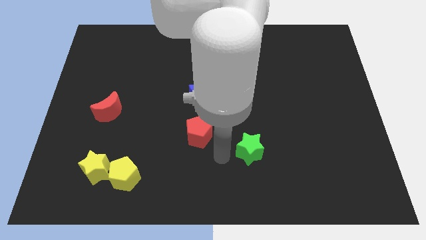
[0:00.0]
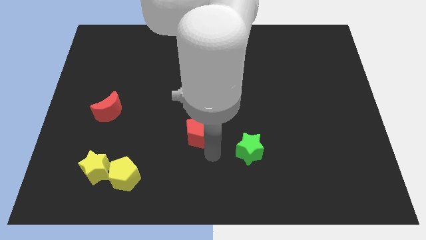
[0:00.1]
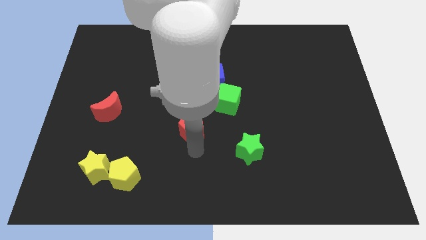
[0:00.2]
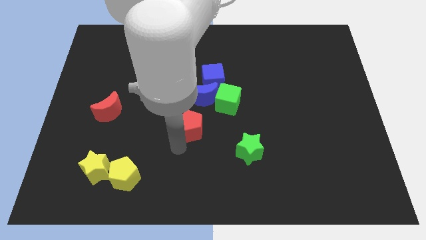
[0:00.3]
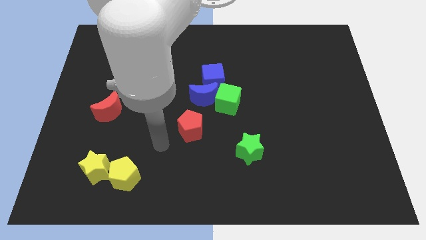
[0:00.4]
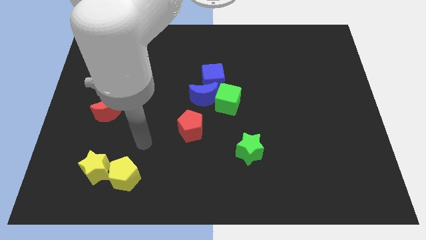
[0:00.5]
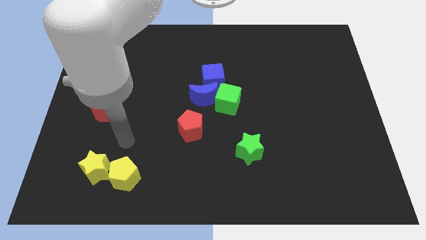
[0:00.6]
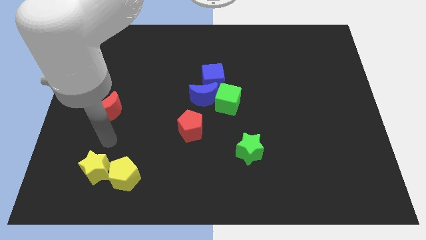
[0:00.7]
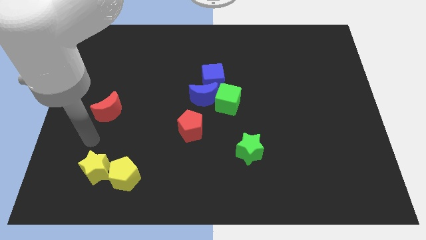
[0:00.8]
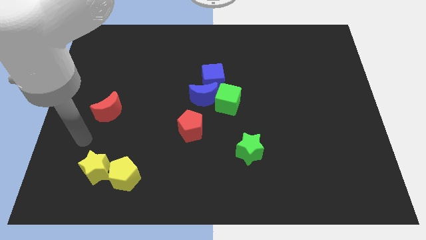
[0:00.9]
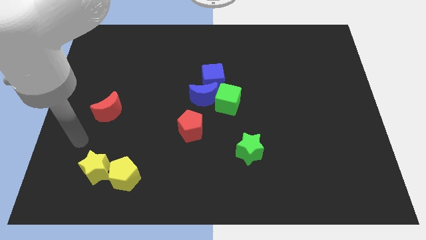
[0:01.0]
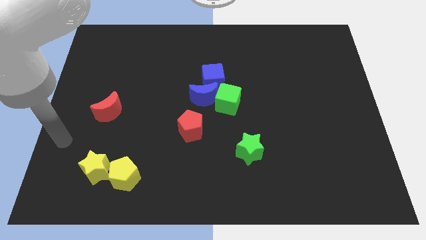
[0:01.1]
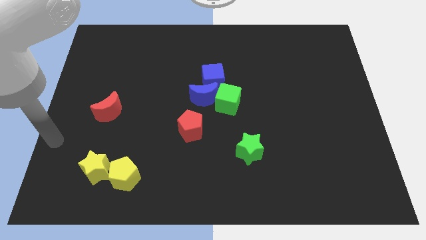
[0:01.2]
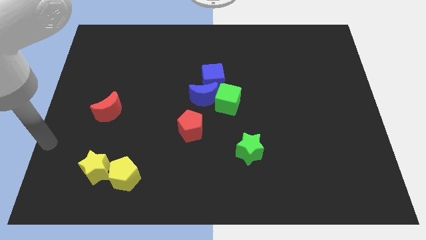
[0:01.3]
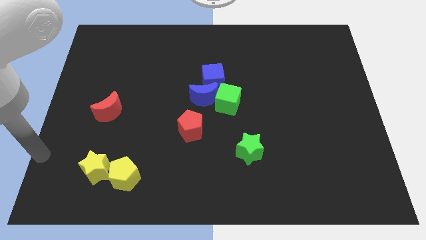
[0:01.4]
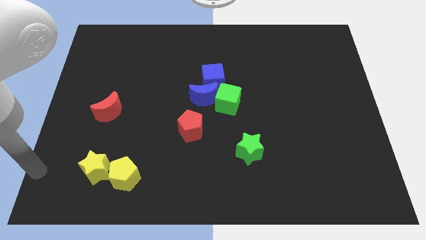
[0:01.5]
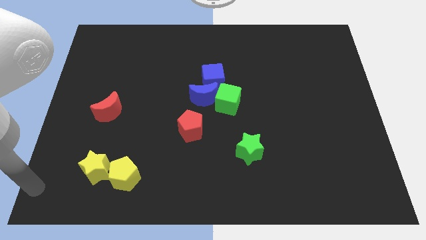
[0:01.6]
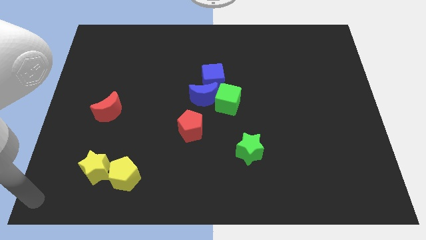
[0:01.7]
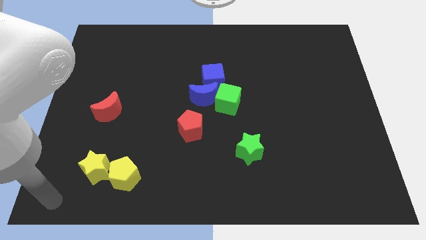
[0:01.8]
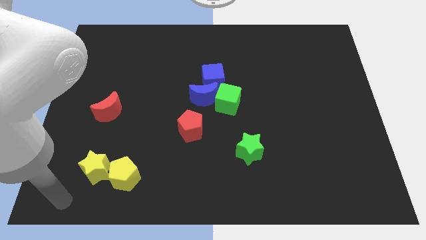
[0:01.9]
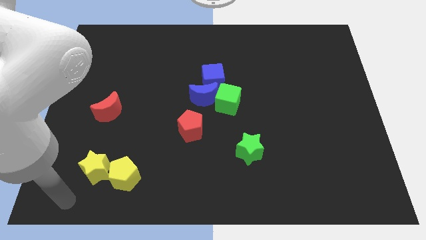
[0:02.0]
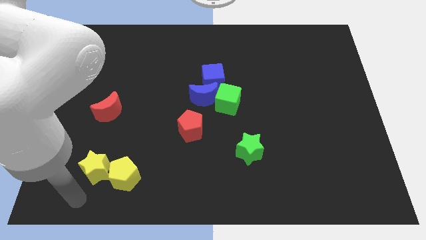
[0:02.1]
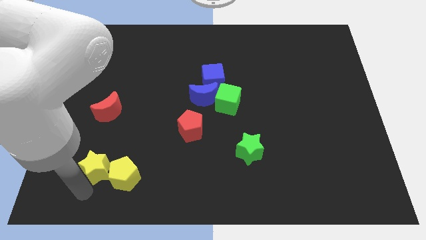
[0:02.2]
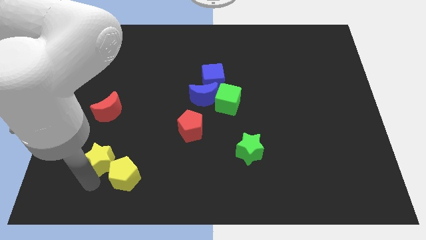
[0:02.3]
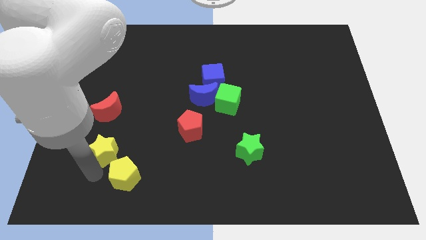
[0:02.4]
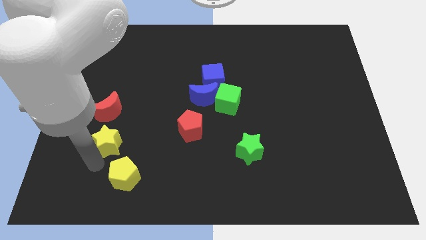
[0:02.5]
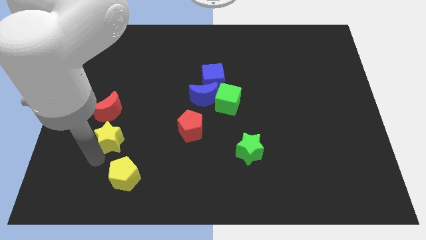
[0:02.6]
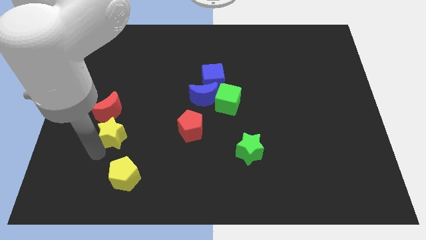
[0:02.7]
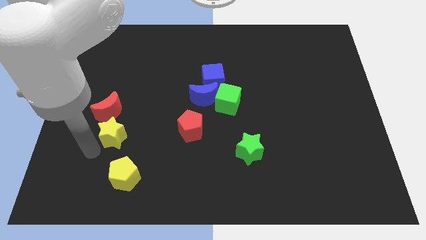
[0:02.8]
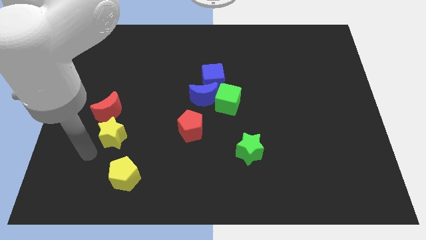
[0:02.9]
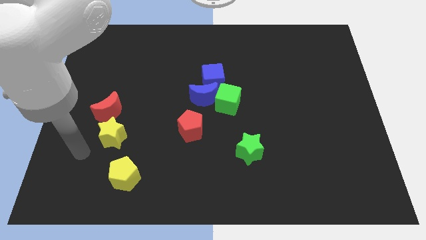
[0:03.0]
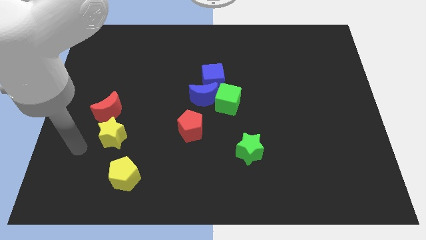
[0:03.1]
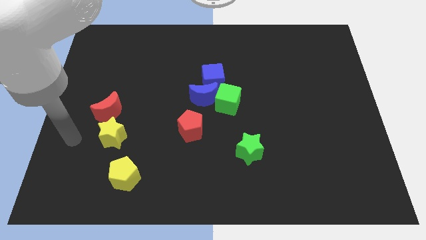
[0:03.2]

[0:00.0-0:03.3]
place the yellow star to the left side of the yellow pentagon

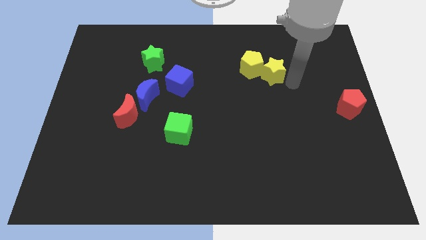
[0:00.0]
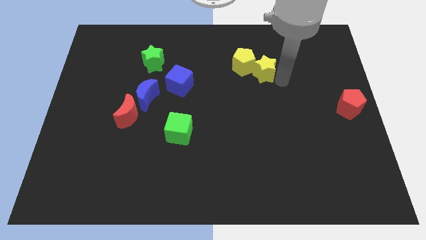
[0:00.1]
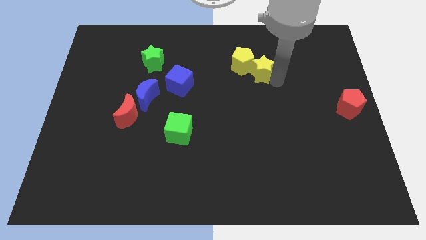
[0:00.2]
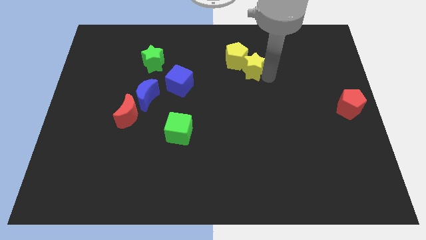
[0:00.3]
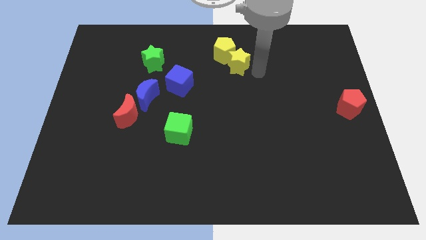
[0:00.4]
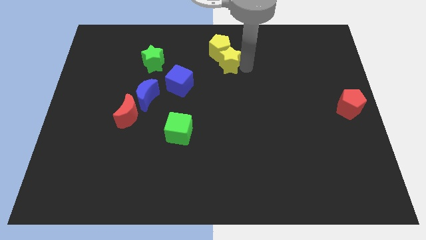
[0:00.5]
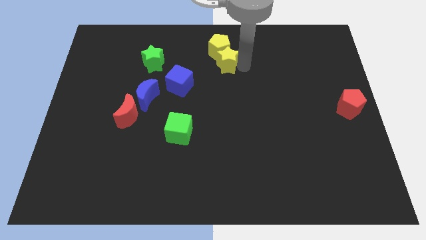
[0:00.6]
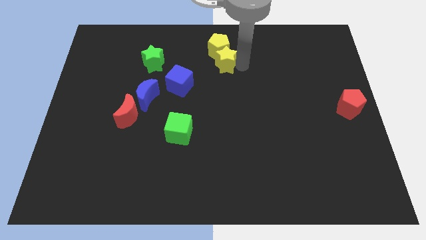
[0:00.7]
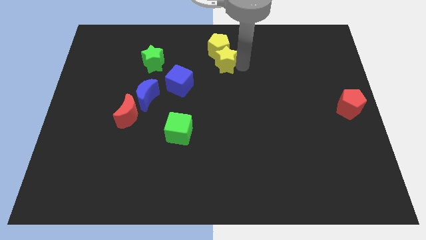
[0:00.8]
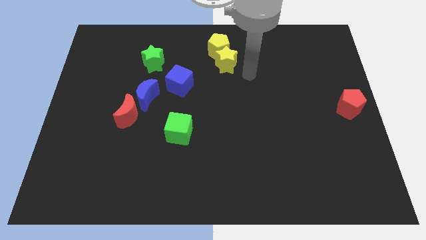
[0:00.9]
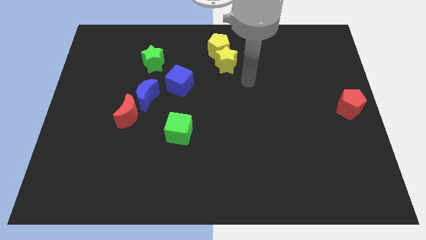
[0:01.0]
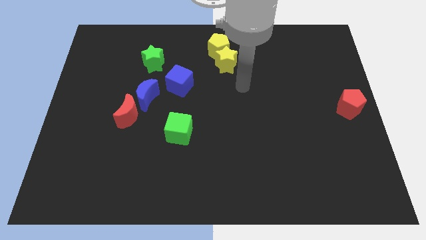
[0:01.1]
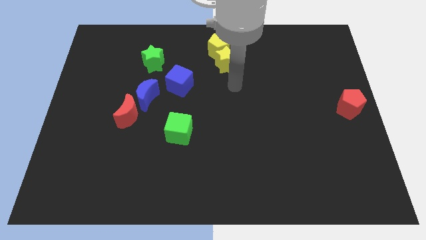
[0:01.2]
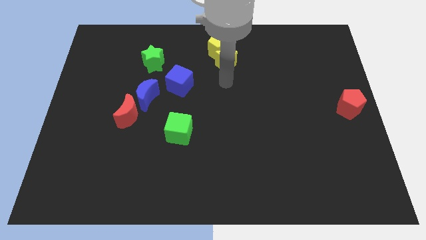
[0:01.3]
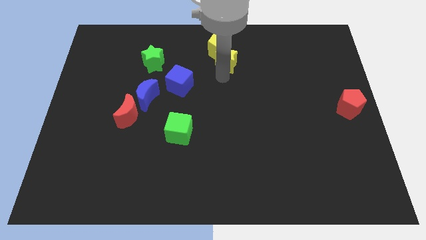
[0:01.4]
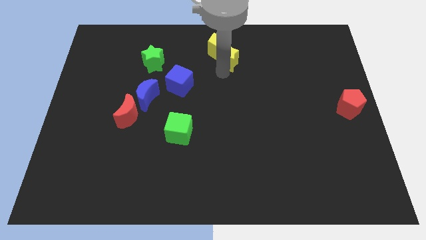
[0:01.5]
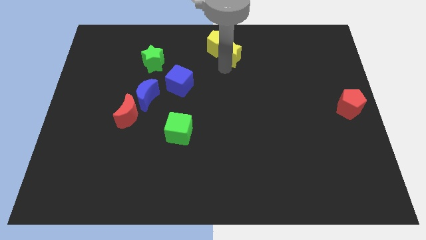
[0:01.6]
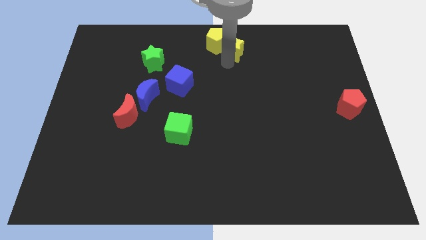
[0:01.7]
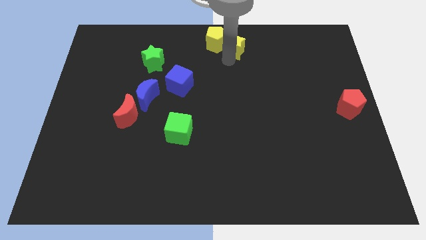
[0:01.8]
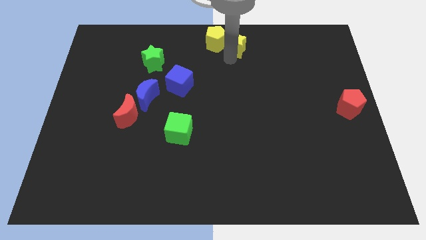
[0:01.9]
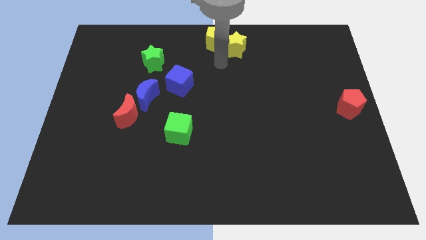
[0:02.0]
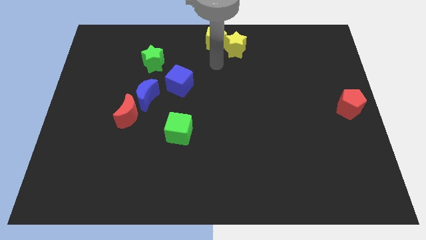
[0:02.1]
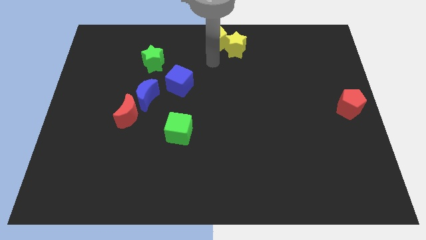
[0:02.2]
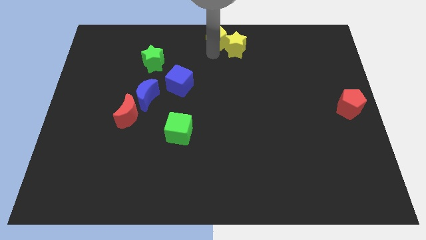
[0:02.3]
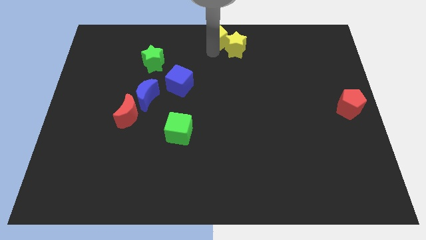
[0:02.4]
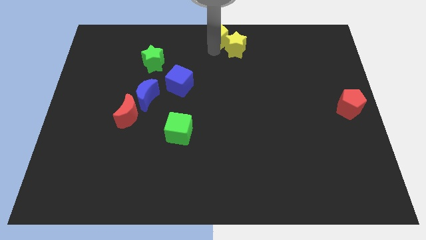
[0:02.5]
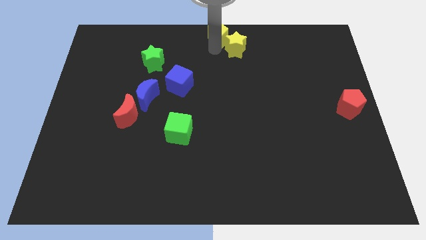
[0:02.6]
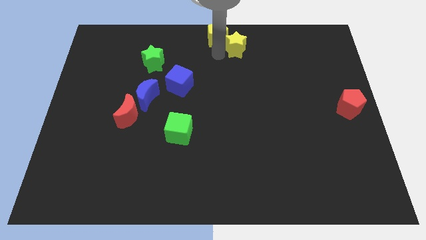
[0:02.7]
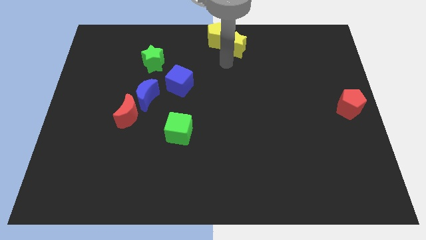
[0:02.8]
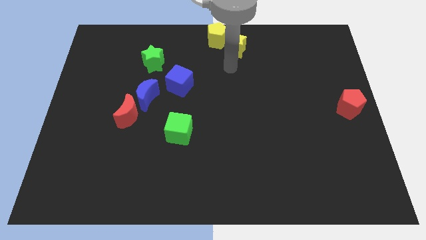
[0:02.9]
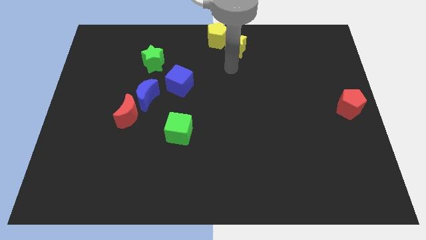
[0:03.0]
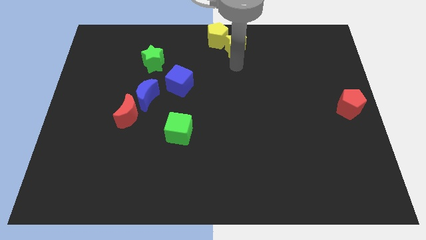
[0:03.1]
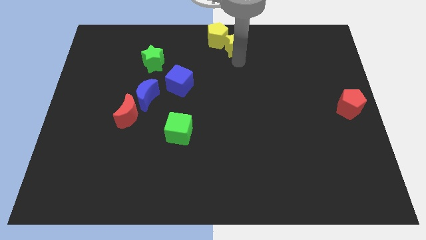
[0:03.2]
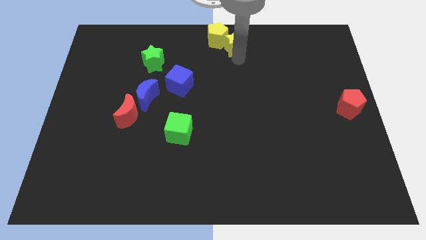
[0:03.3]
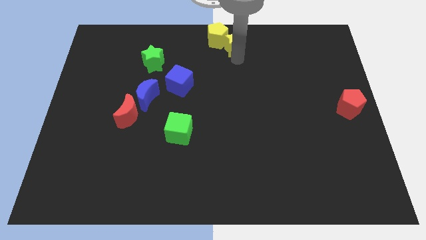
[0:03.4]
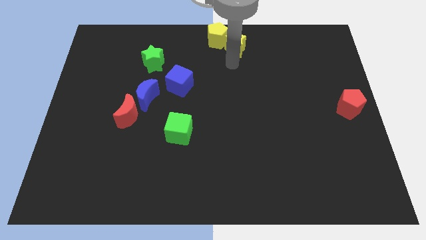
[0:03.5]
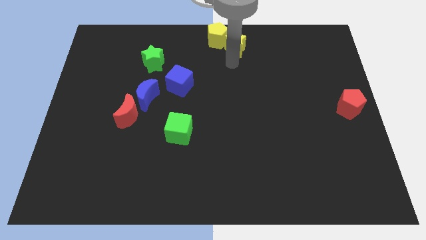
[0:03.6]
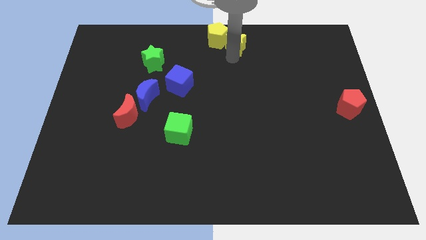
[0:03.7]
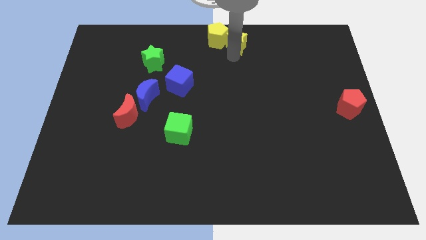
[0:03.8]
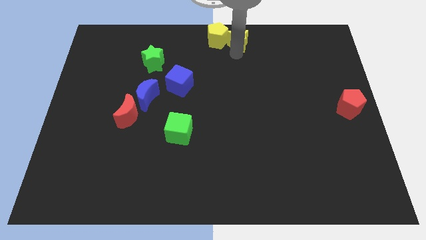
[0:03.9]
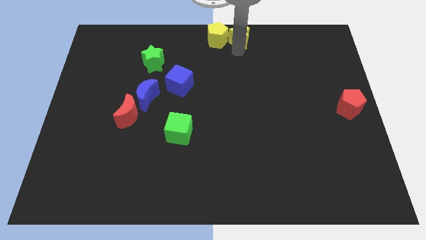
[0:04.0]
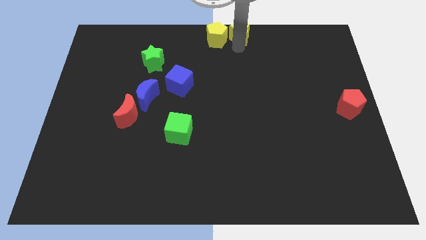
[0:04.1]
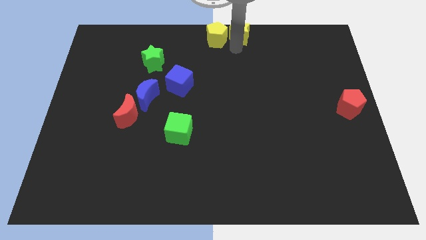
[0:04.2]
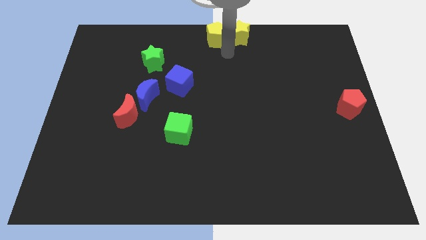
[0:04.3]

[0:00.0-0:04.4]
move the yellow blocks towards the top center of the board

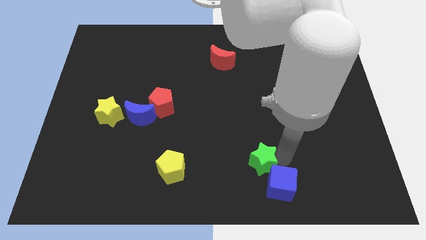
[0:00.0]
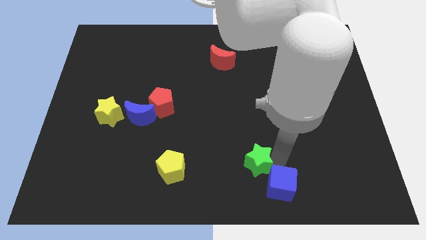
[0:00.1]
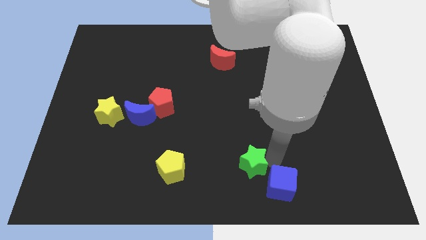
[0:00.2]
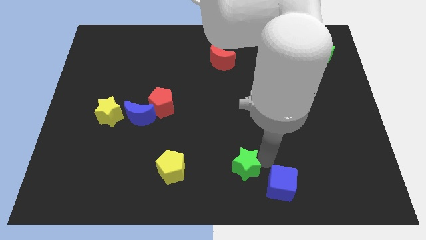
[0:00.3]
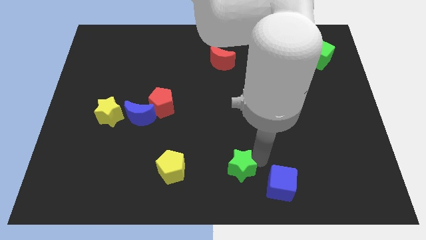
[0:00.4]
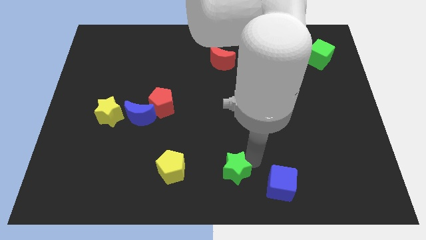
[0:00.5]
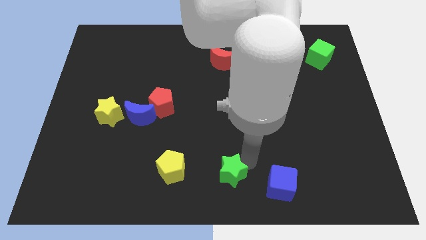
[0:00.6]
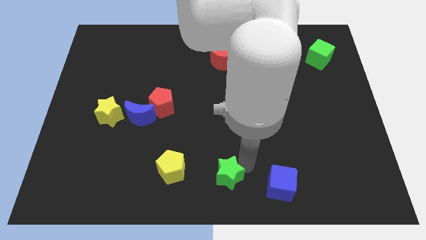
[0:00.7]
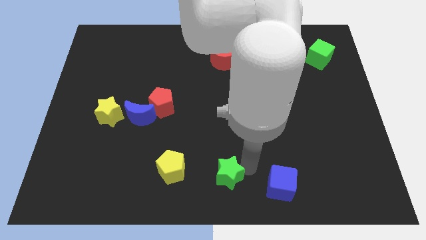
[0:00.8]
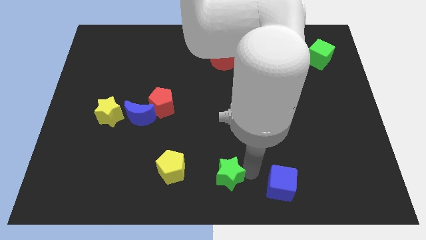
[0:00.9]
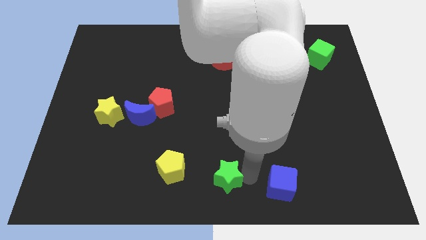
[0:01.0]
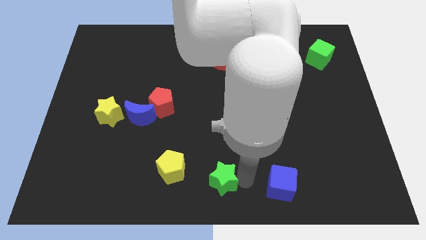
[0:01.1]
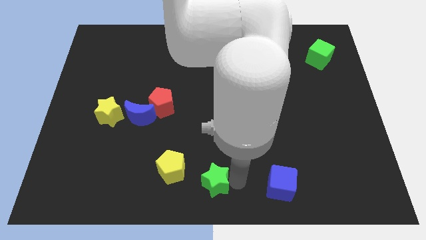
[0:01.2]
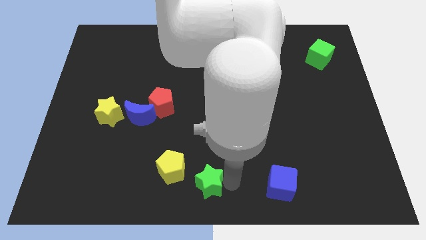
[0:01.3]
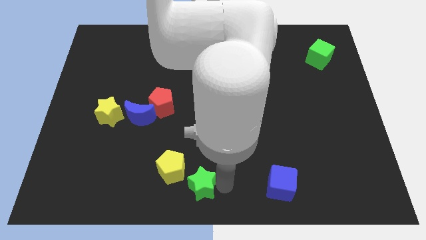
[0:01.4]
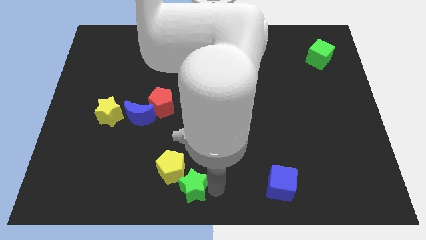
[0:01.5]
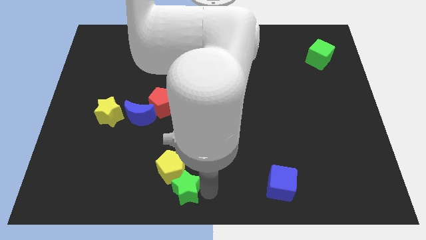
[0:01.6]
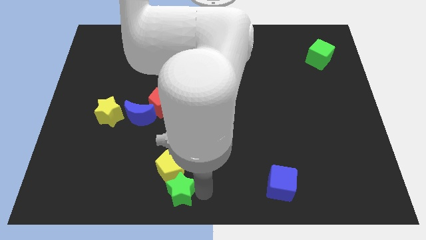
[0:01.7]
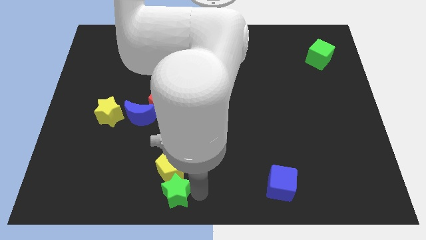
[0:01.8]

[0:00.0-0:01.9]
push the green star to the bottom of yellow pentagon
